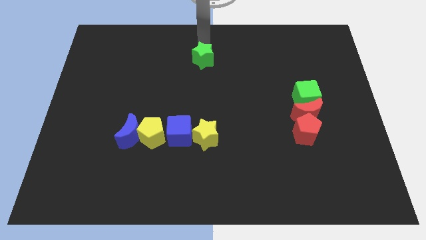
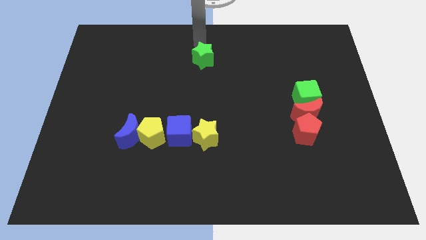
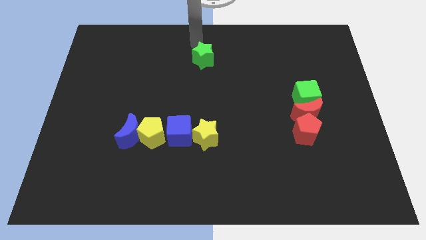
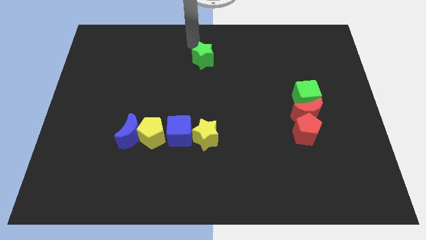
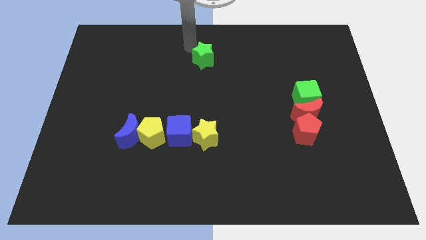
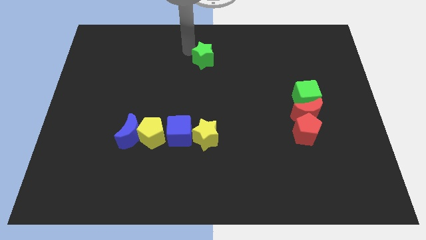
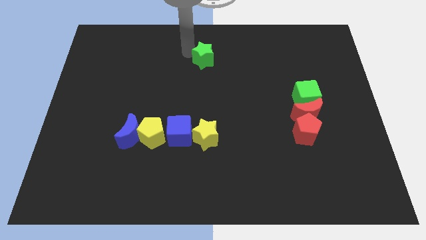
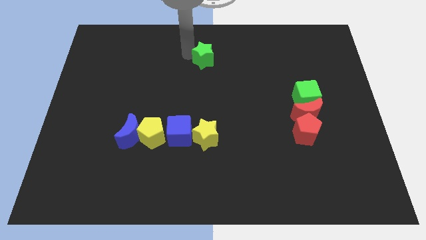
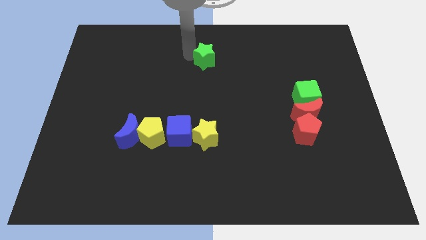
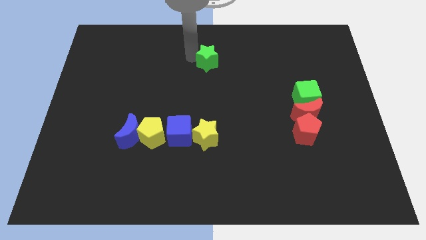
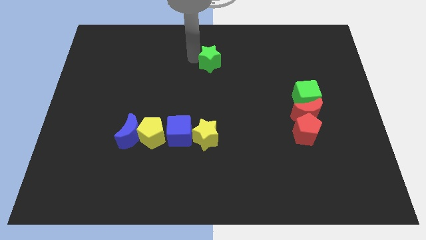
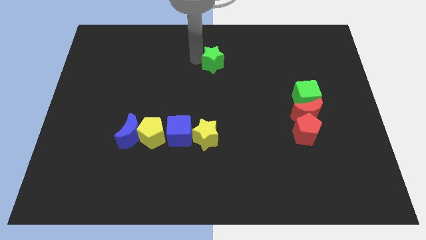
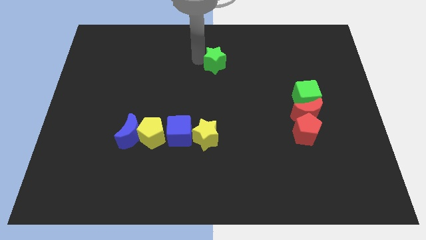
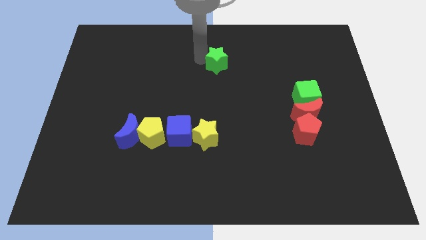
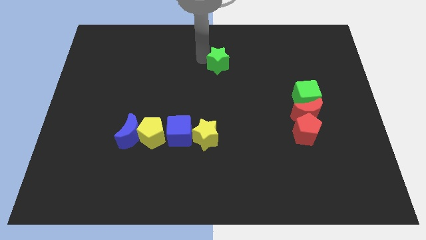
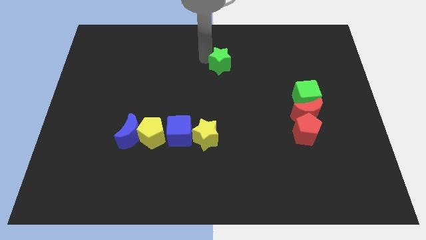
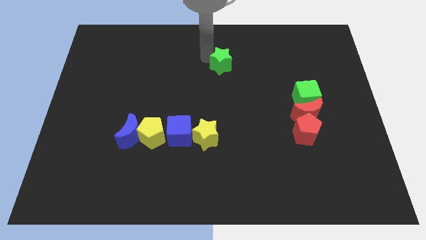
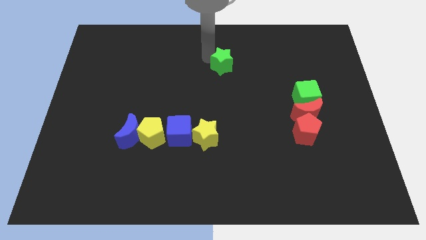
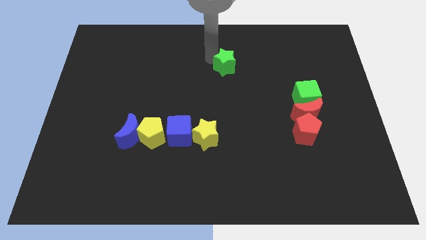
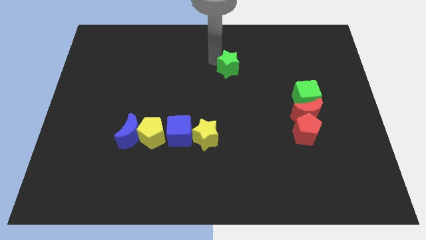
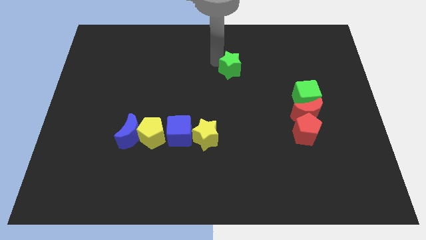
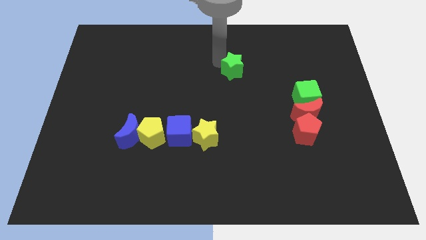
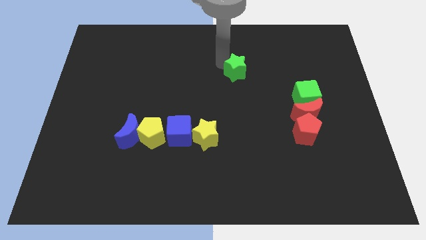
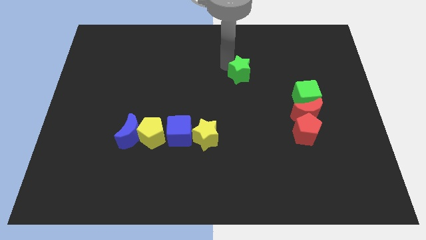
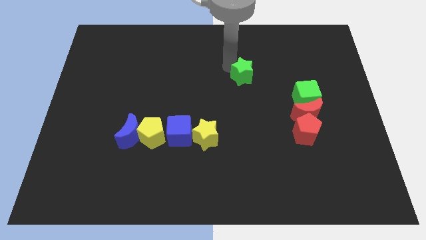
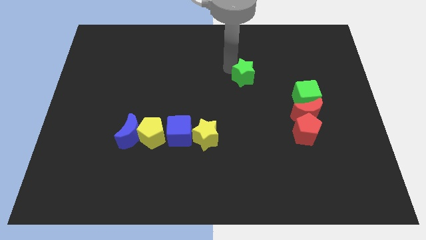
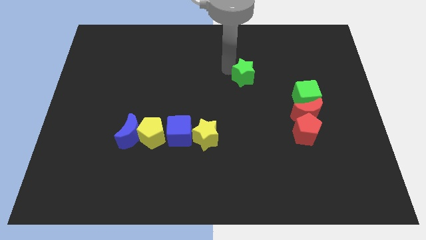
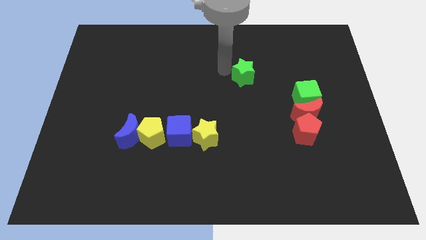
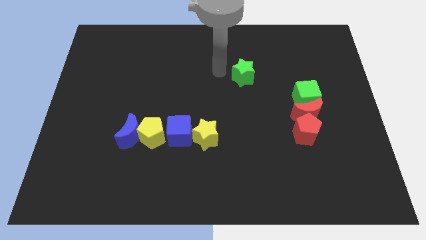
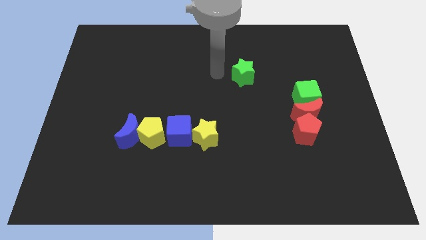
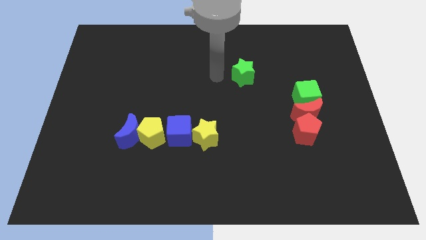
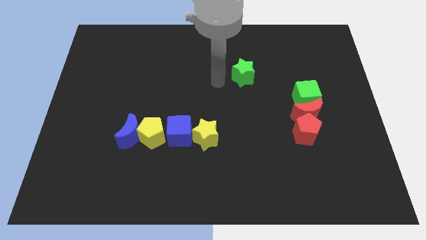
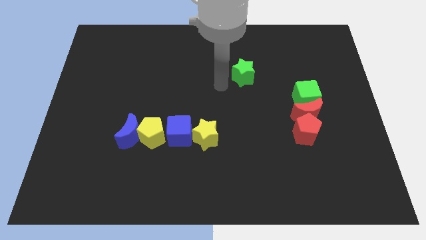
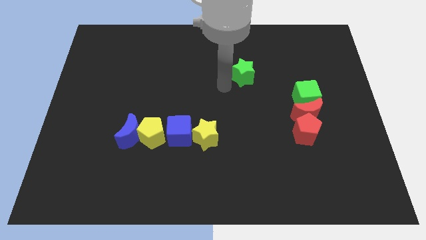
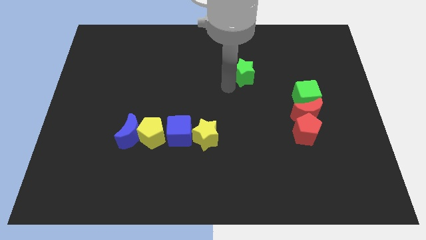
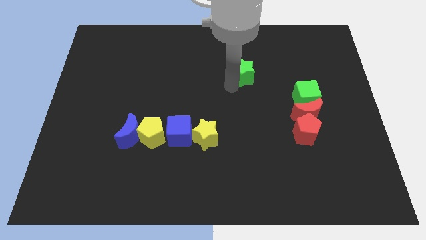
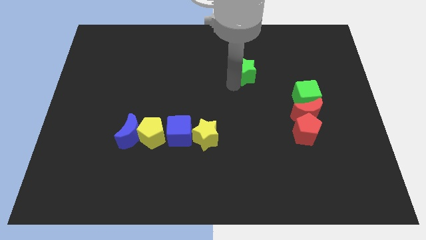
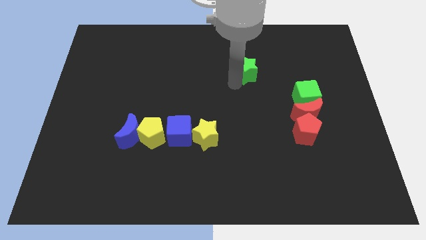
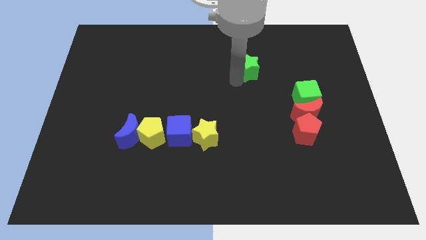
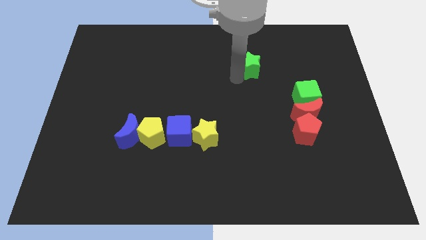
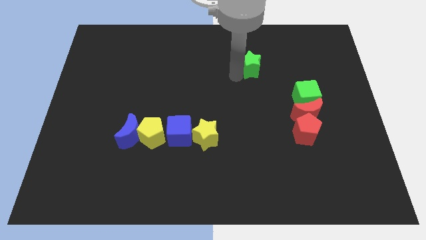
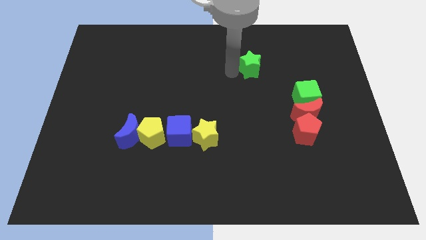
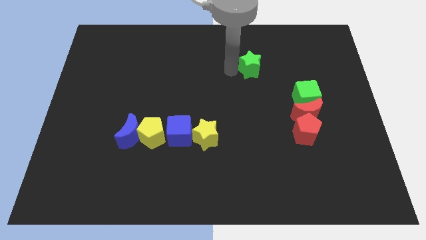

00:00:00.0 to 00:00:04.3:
move green star towards right side

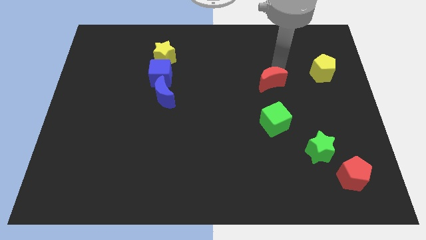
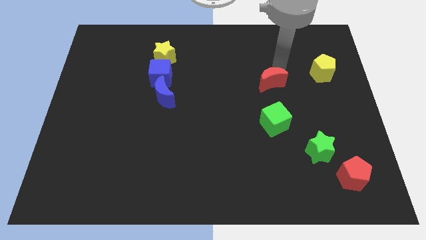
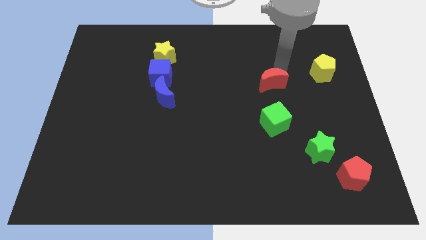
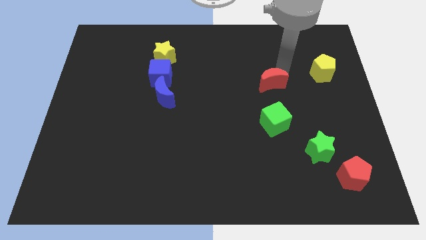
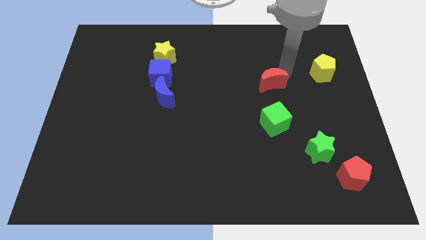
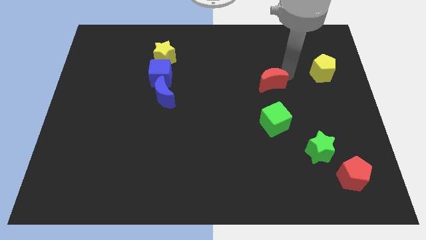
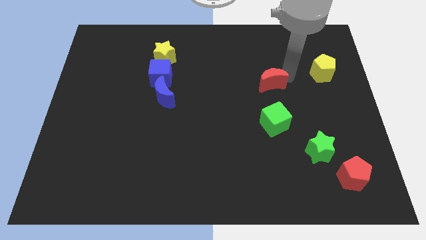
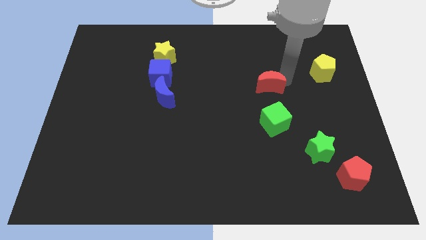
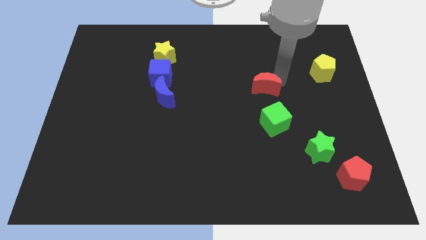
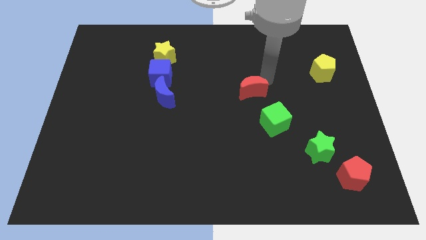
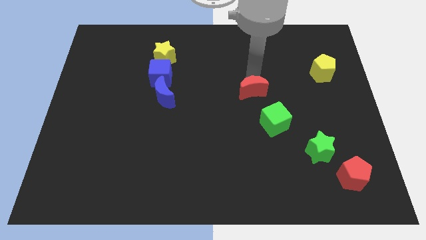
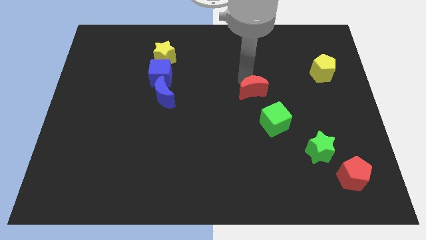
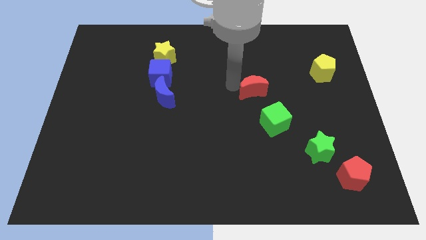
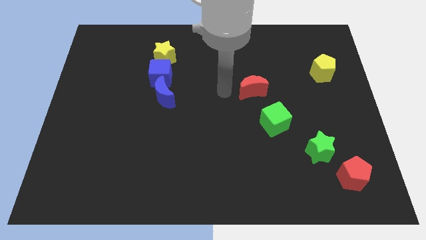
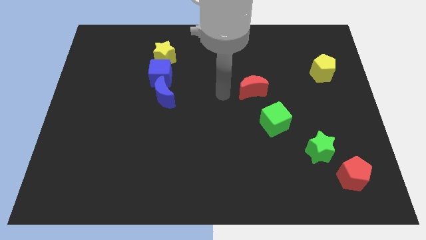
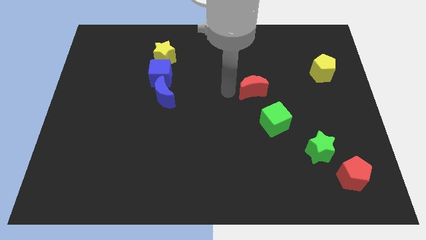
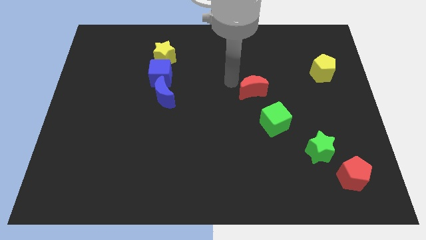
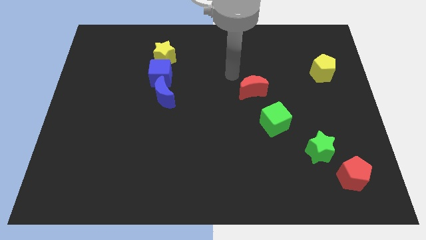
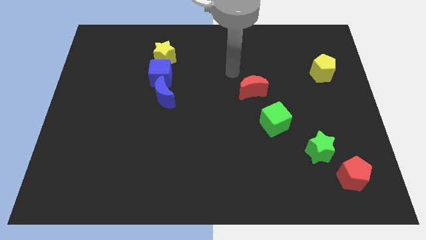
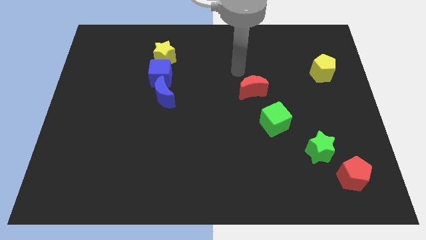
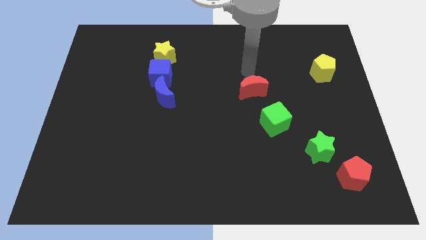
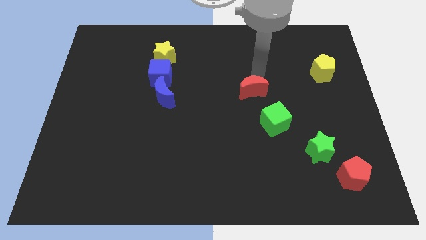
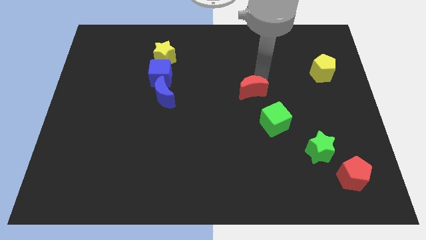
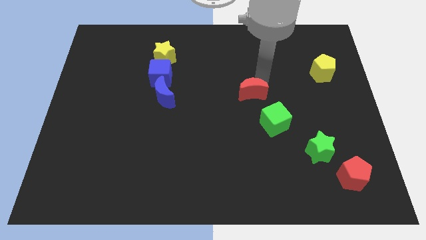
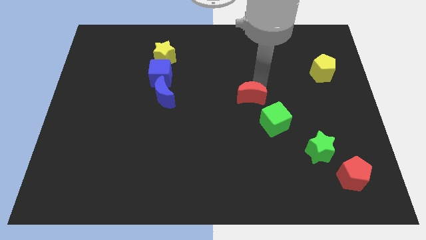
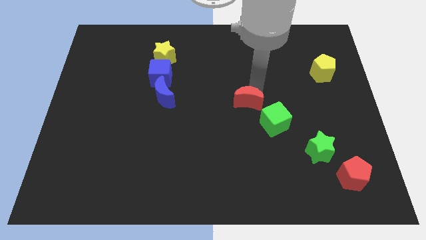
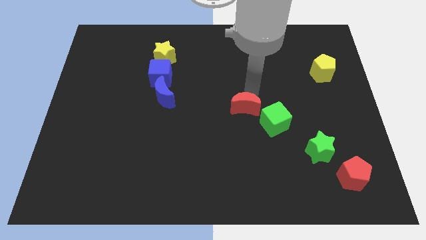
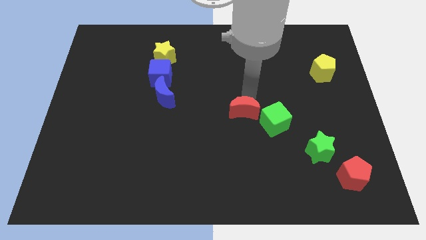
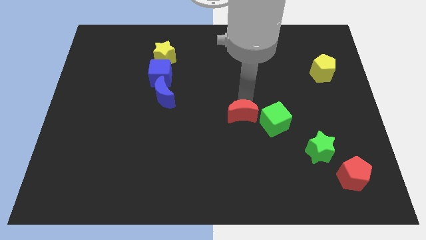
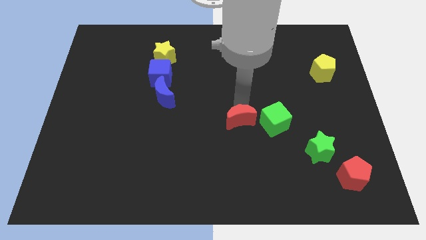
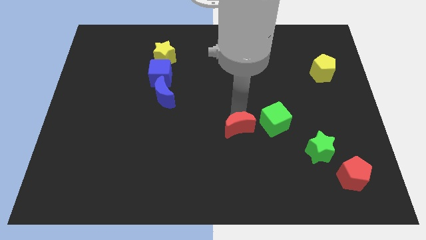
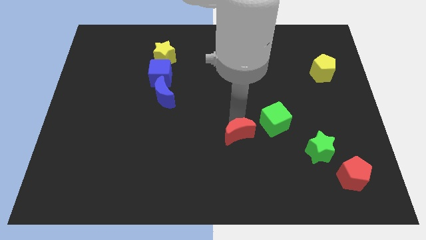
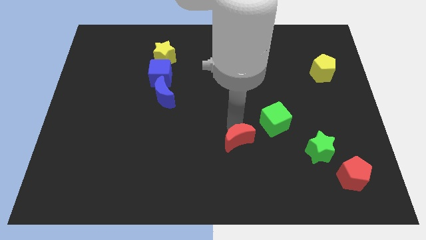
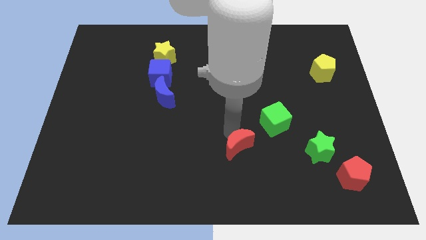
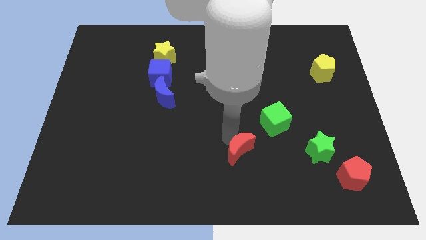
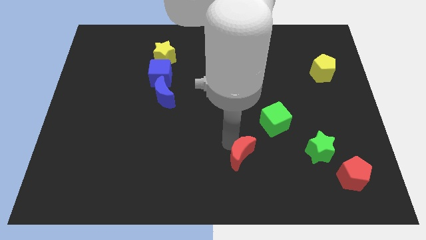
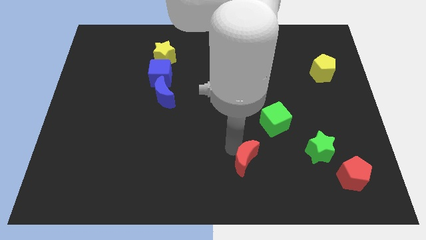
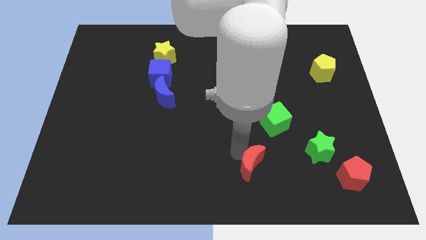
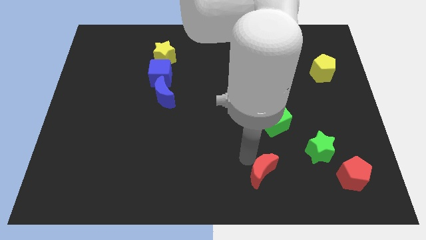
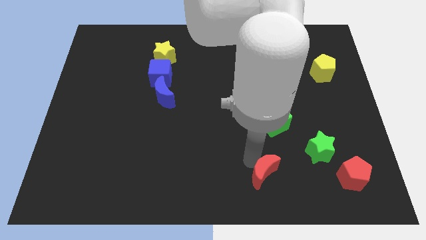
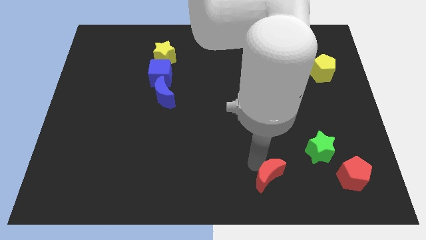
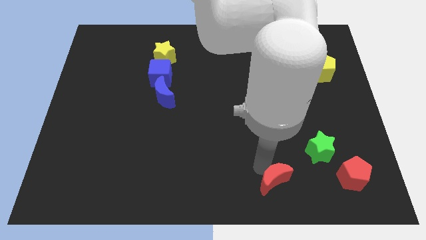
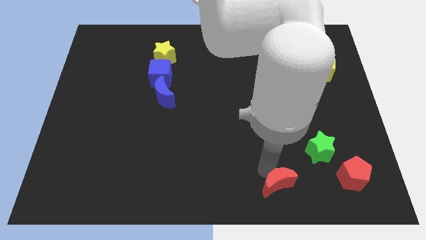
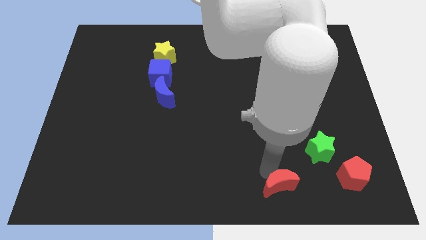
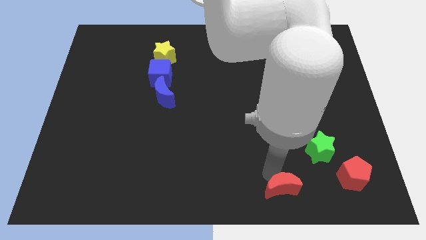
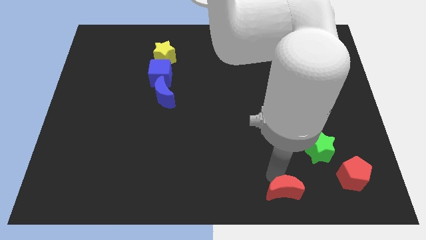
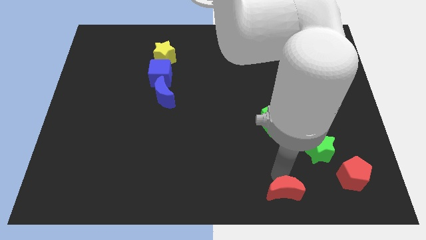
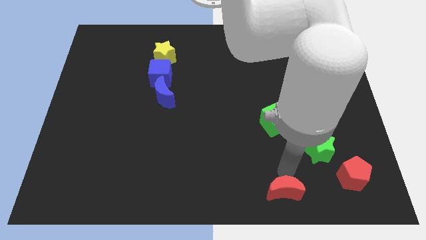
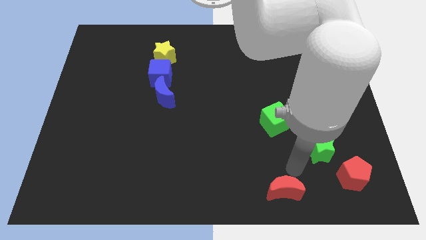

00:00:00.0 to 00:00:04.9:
move red crescent to the bottom of the board
